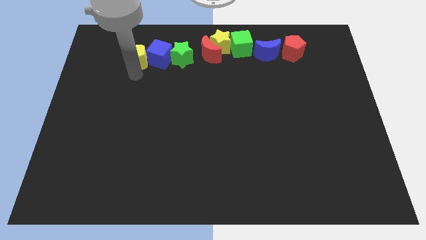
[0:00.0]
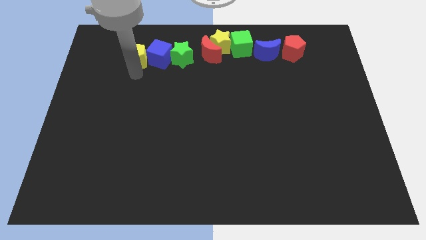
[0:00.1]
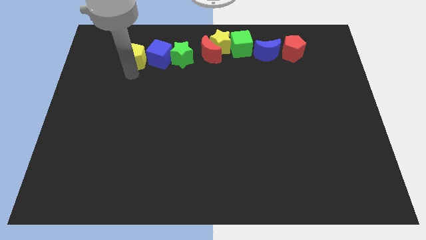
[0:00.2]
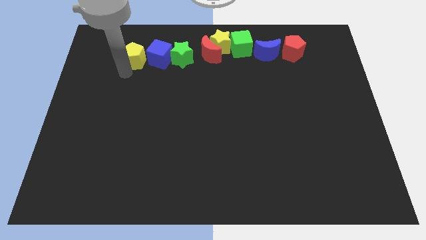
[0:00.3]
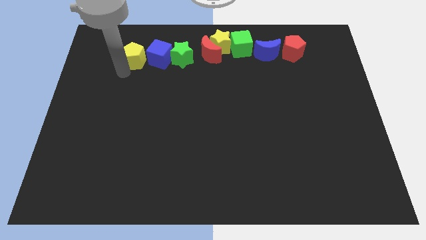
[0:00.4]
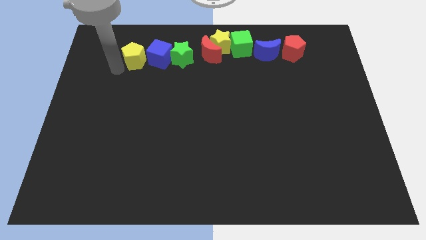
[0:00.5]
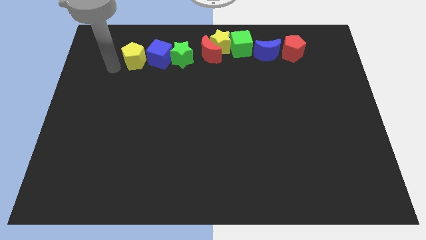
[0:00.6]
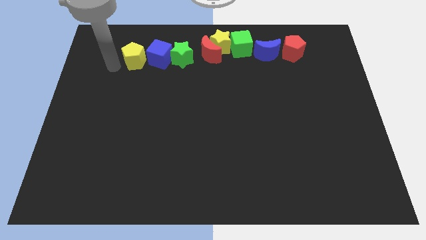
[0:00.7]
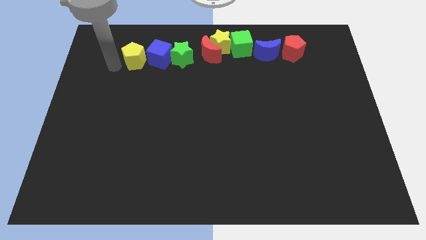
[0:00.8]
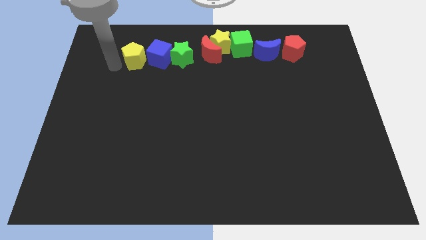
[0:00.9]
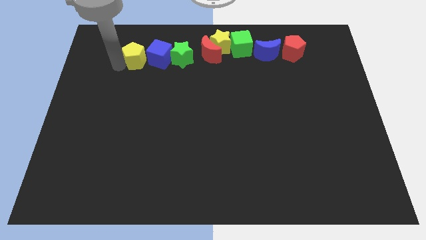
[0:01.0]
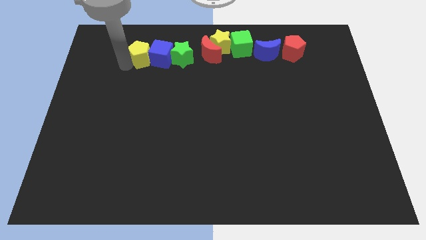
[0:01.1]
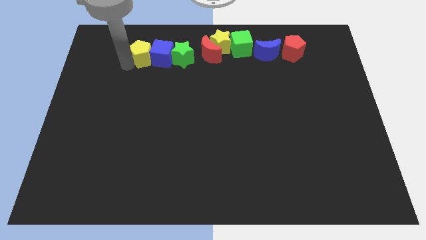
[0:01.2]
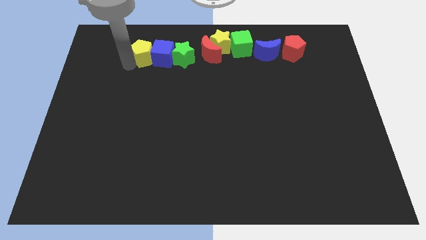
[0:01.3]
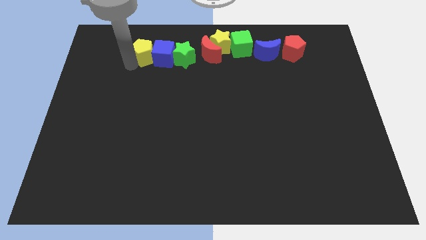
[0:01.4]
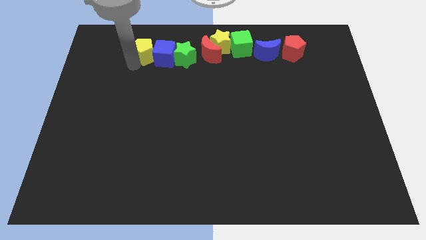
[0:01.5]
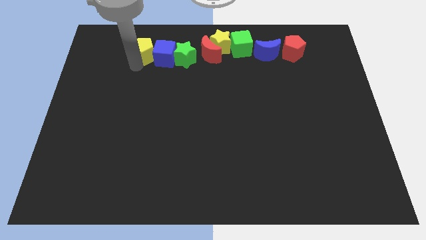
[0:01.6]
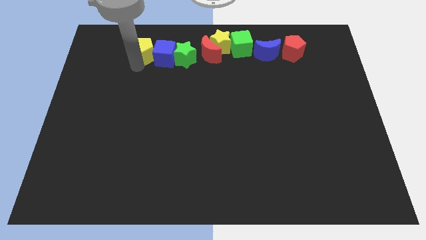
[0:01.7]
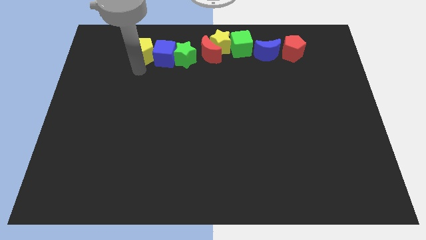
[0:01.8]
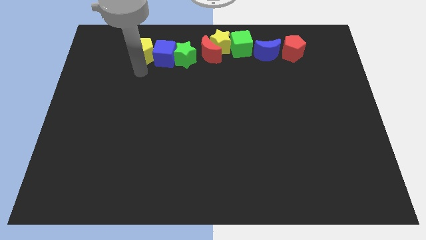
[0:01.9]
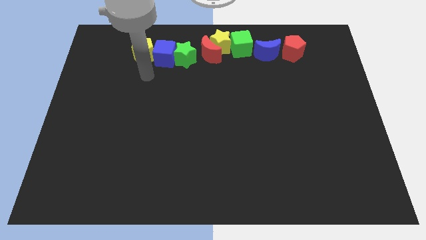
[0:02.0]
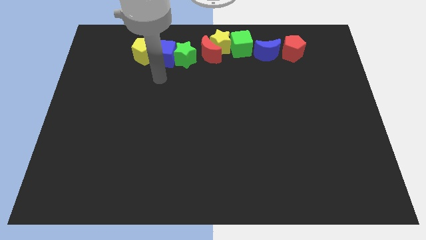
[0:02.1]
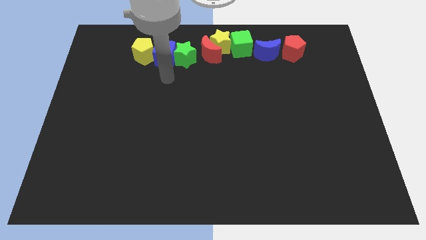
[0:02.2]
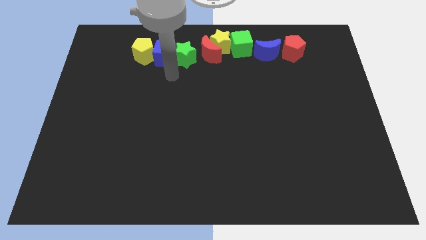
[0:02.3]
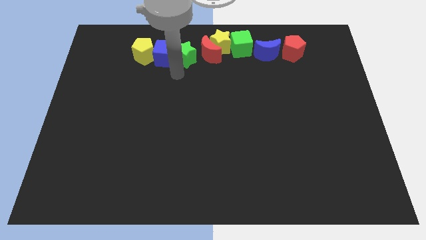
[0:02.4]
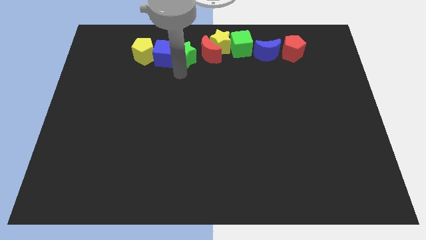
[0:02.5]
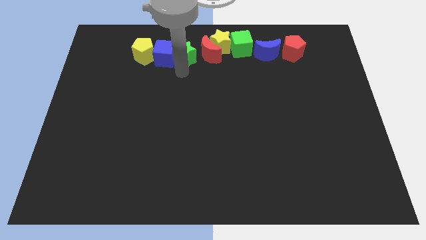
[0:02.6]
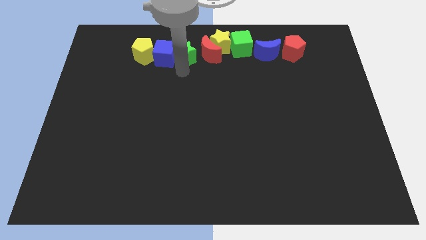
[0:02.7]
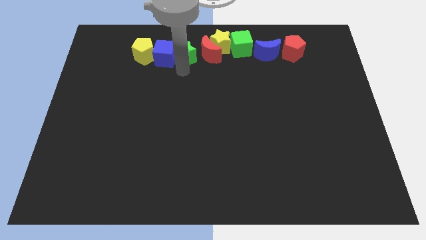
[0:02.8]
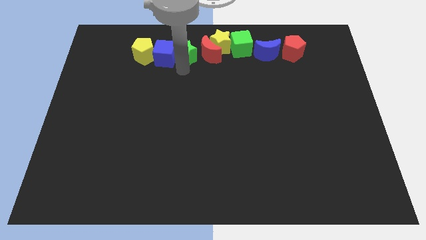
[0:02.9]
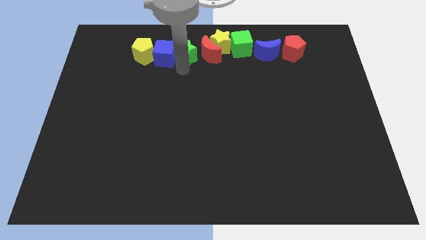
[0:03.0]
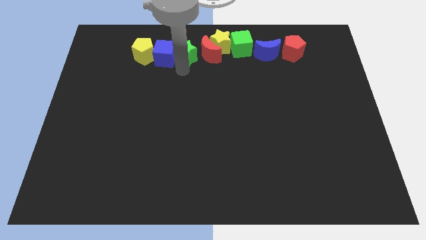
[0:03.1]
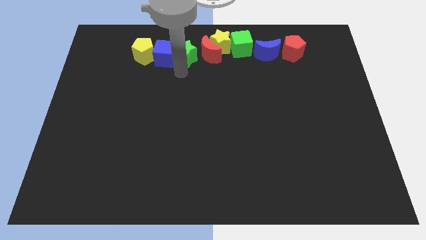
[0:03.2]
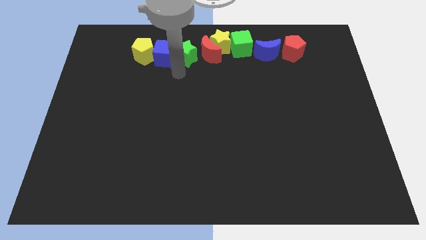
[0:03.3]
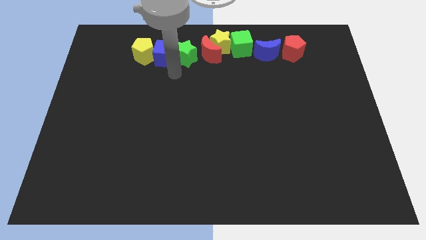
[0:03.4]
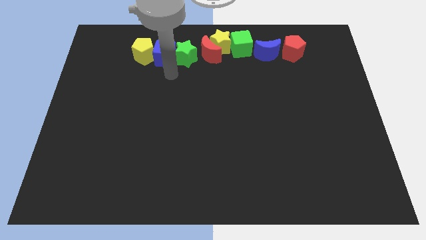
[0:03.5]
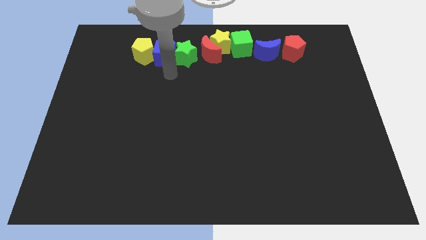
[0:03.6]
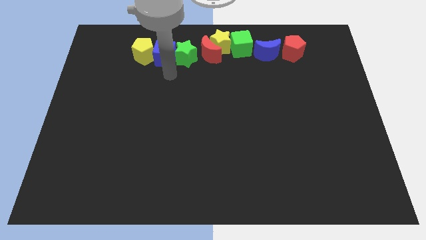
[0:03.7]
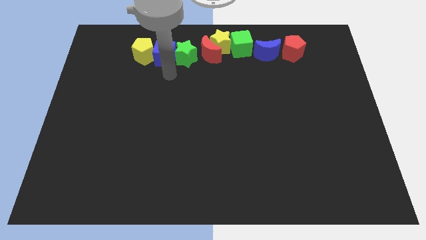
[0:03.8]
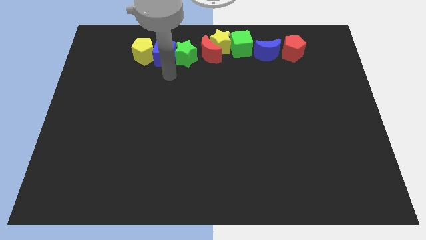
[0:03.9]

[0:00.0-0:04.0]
move the green star slightly up

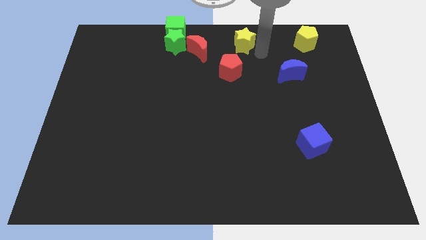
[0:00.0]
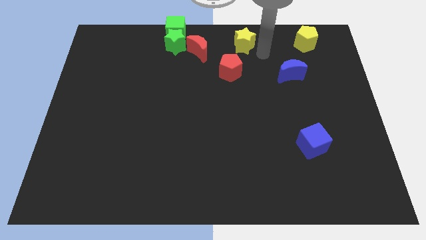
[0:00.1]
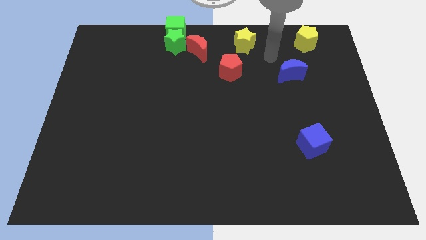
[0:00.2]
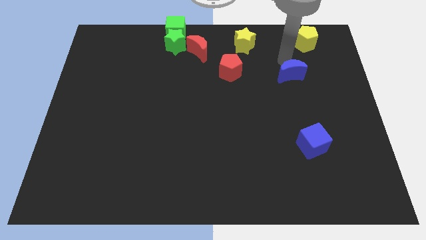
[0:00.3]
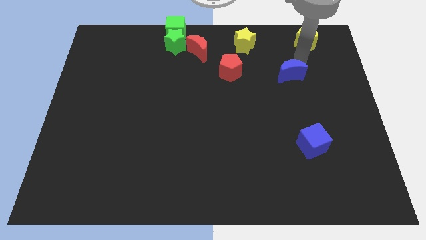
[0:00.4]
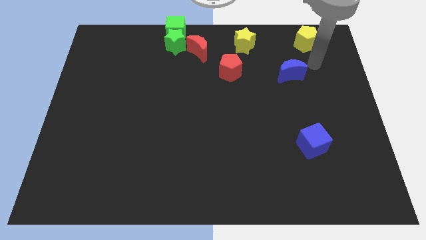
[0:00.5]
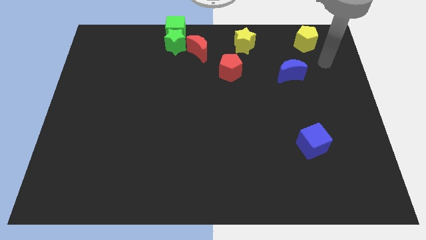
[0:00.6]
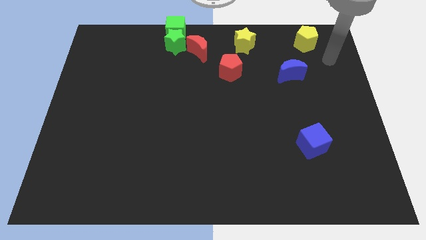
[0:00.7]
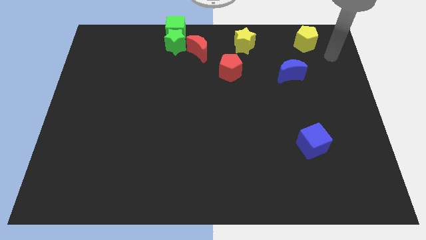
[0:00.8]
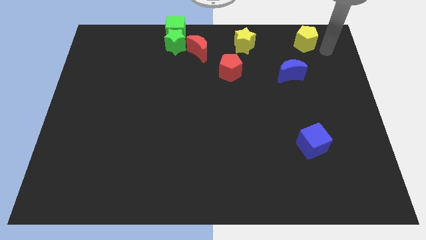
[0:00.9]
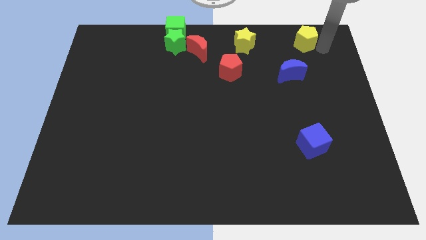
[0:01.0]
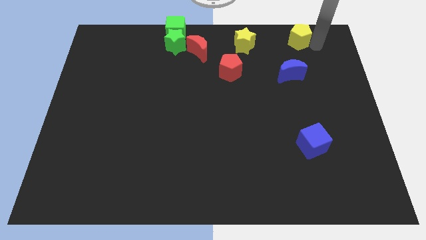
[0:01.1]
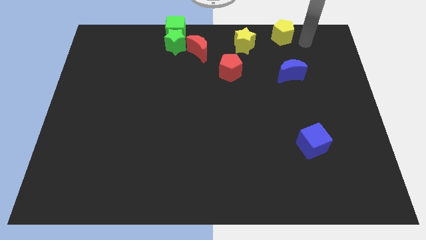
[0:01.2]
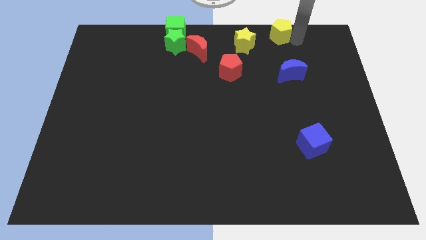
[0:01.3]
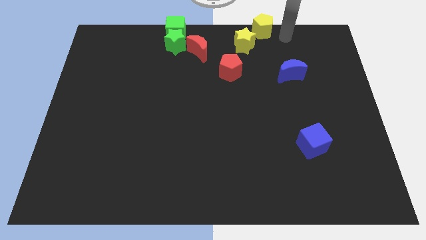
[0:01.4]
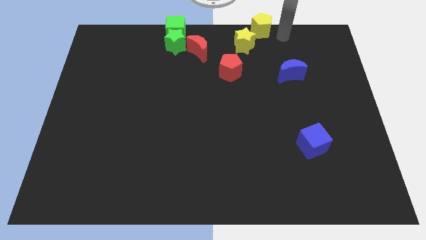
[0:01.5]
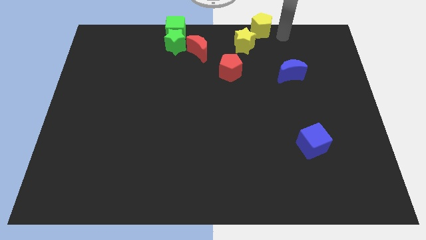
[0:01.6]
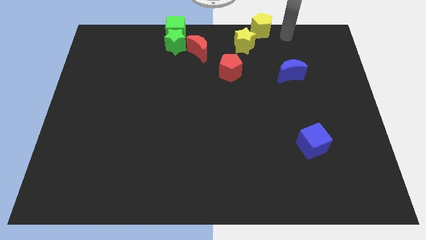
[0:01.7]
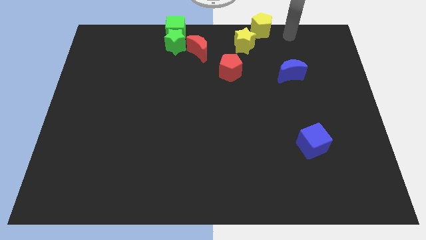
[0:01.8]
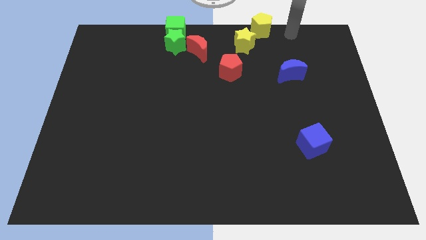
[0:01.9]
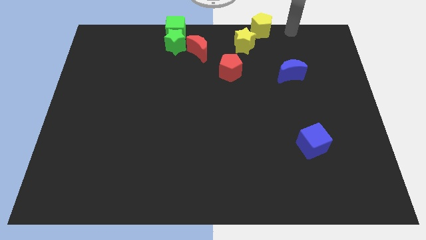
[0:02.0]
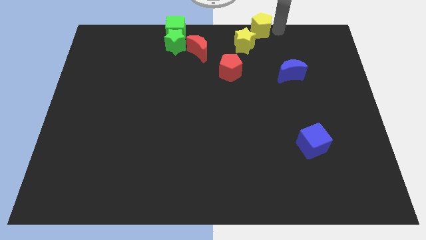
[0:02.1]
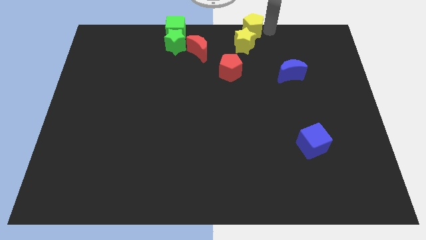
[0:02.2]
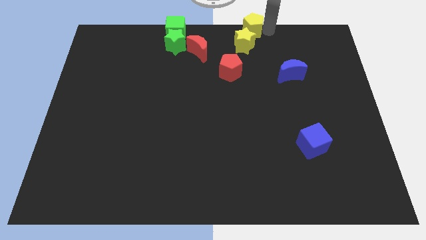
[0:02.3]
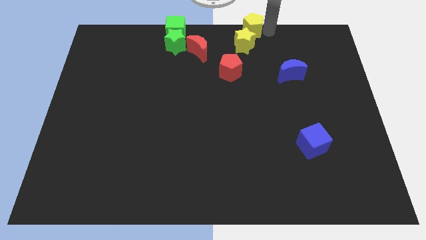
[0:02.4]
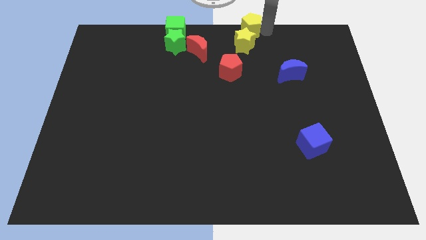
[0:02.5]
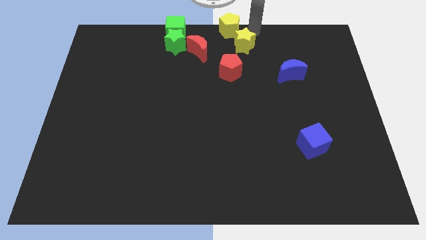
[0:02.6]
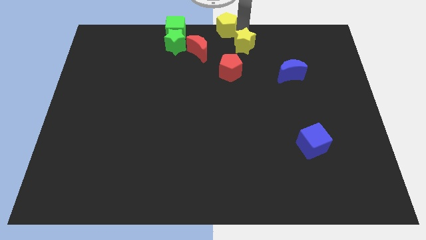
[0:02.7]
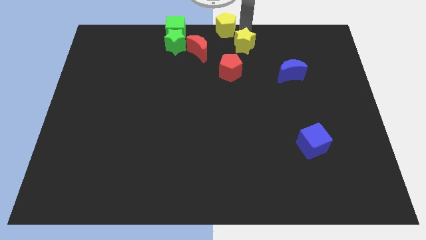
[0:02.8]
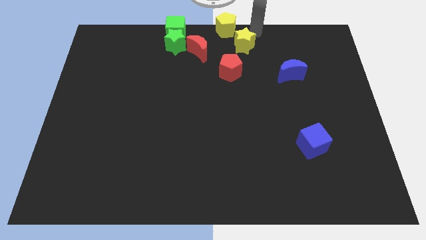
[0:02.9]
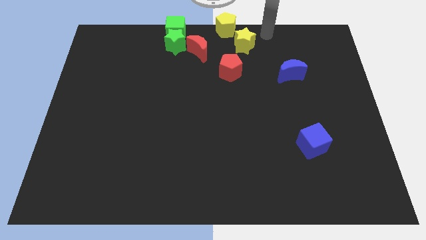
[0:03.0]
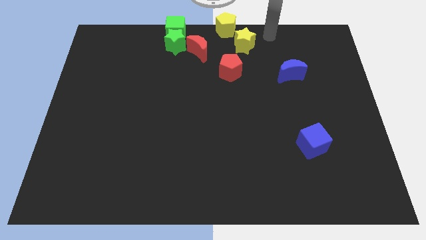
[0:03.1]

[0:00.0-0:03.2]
place yellow pentagon to the right of the green cube

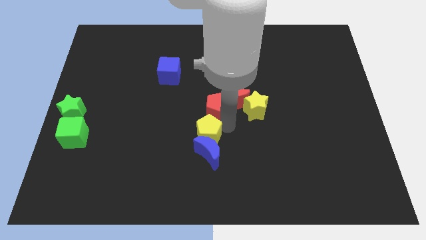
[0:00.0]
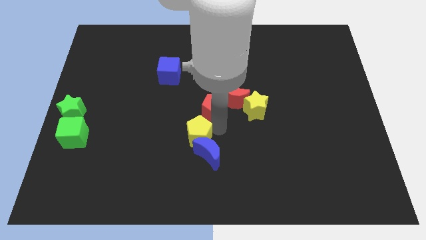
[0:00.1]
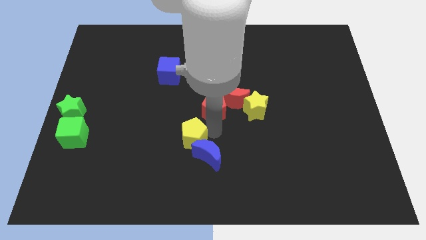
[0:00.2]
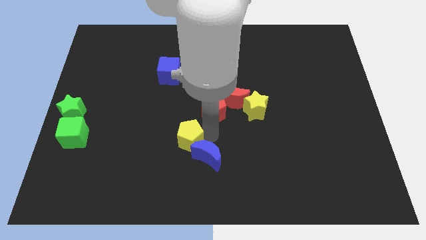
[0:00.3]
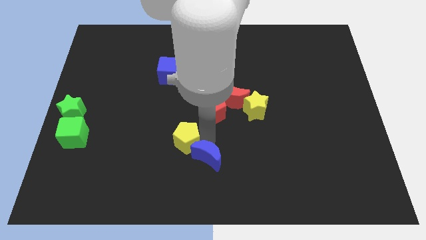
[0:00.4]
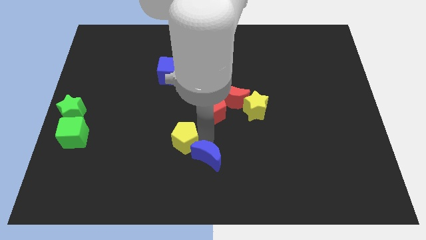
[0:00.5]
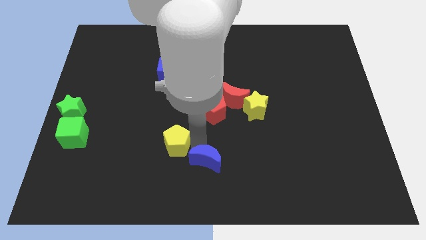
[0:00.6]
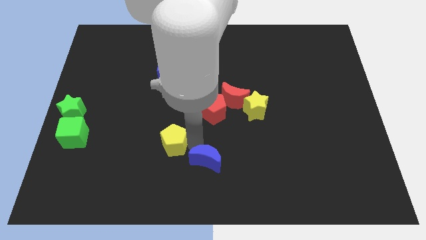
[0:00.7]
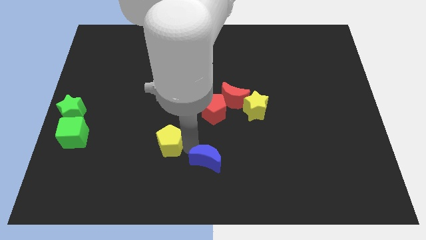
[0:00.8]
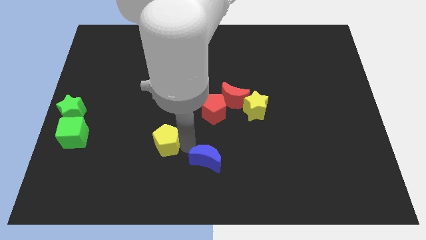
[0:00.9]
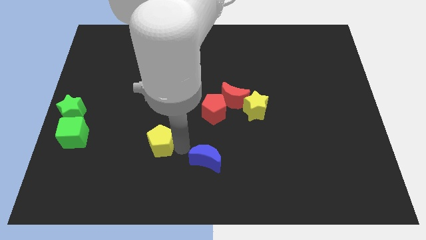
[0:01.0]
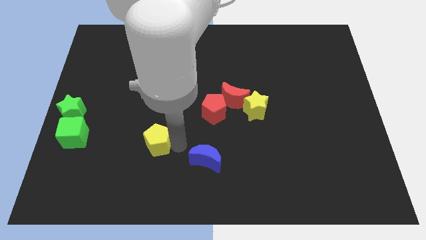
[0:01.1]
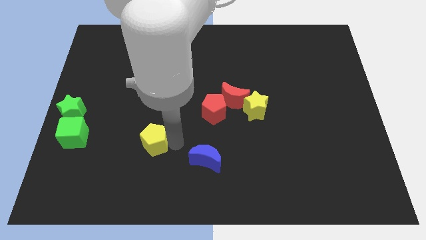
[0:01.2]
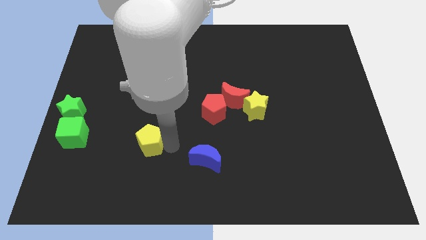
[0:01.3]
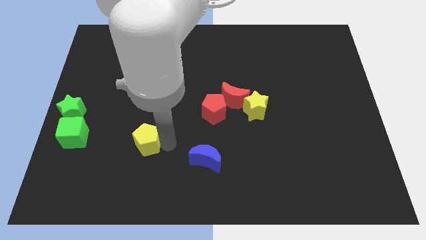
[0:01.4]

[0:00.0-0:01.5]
move the yellow pentagon to the left of the blue crescent

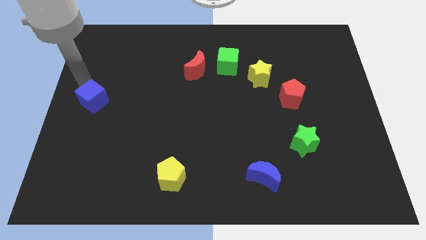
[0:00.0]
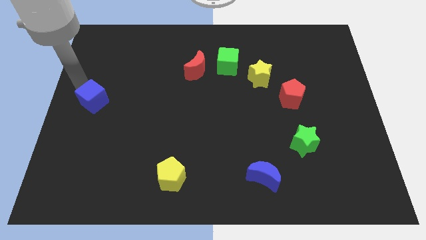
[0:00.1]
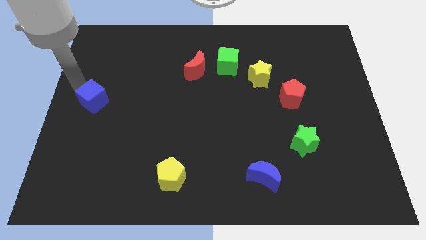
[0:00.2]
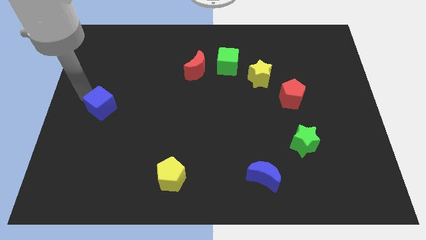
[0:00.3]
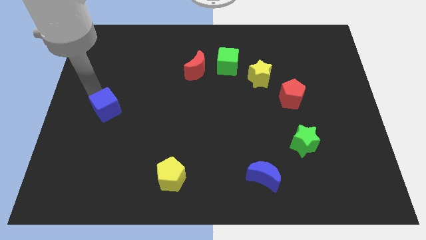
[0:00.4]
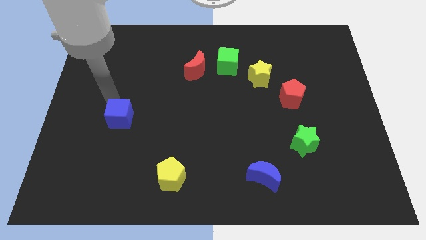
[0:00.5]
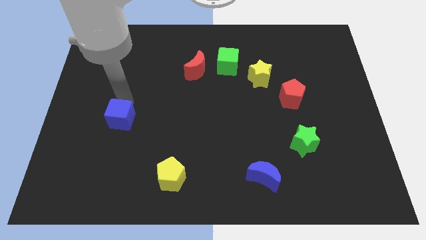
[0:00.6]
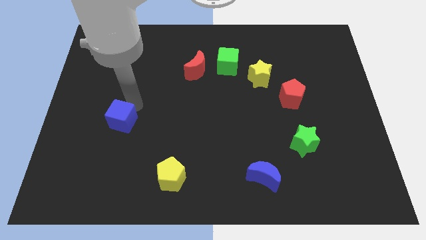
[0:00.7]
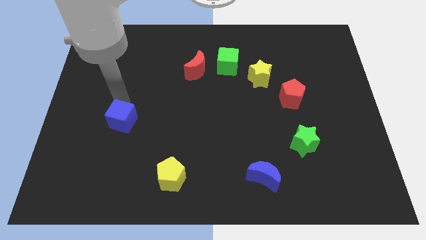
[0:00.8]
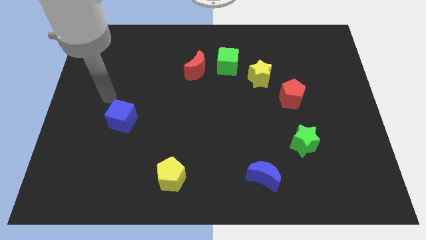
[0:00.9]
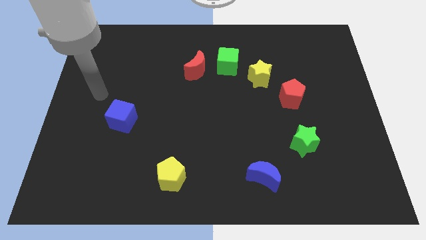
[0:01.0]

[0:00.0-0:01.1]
push the blue cube slightly to the center left
